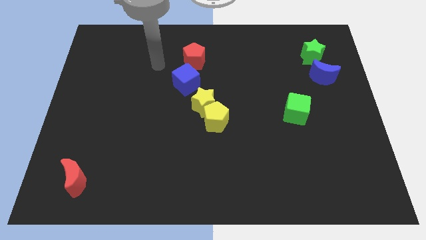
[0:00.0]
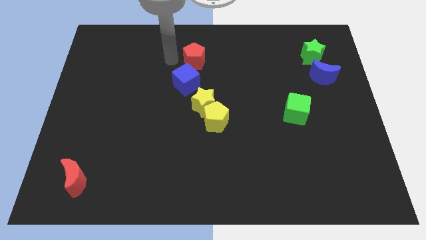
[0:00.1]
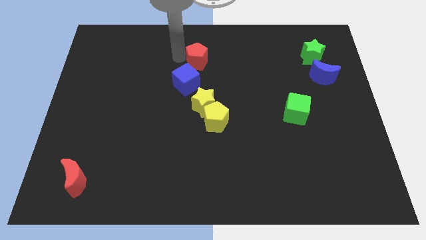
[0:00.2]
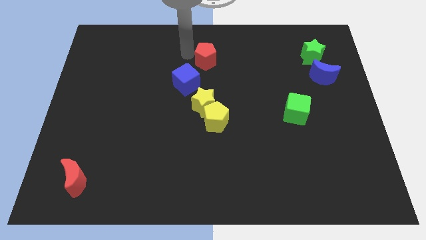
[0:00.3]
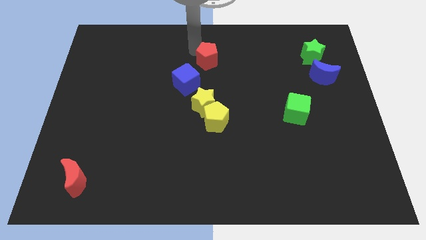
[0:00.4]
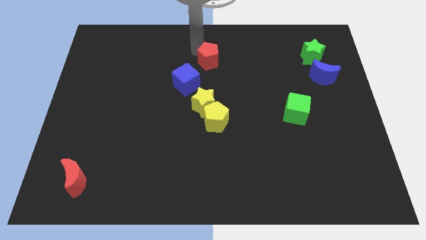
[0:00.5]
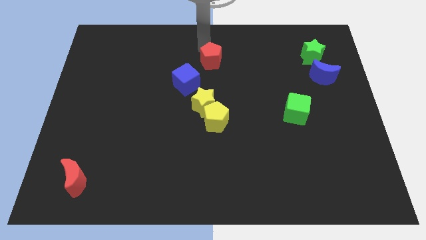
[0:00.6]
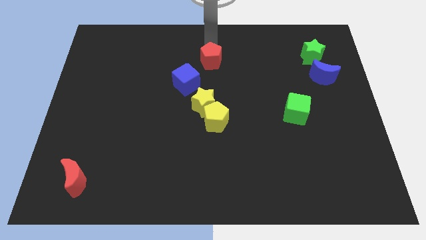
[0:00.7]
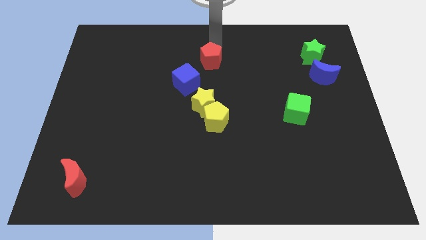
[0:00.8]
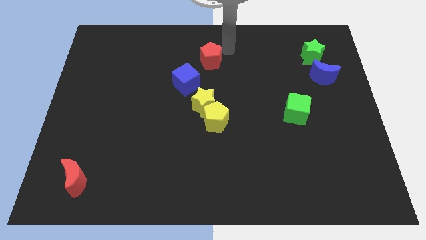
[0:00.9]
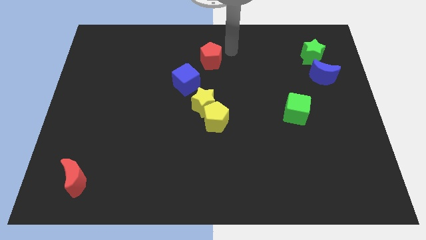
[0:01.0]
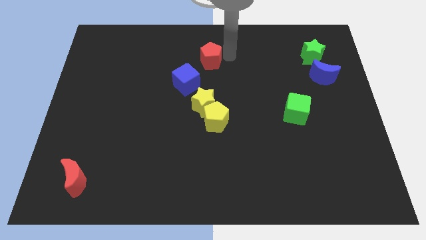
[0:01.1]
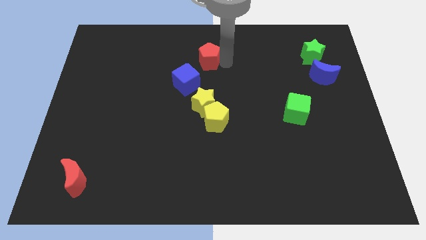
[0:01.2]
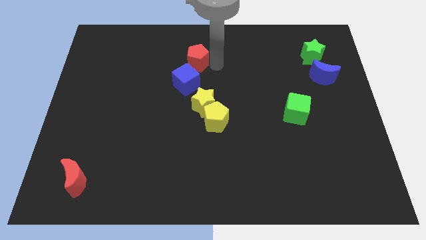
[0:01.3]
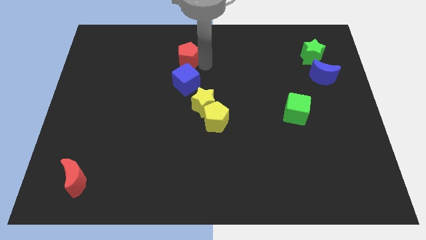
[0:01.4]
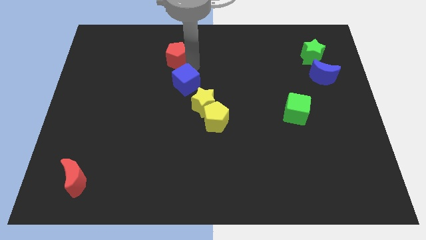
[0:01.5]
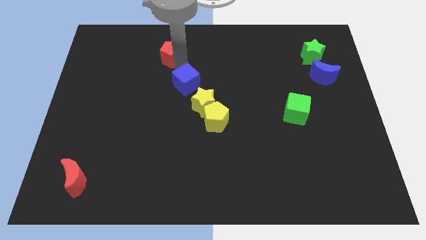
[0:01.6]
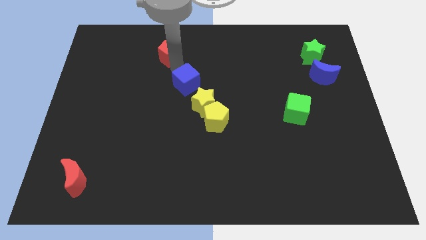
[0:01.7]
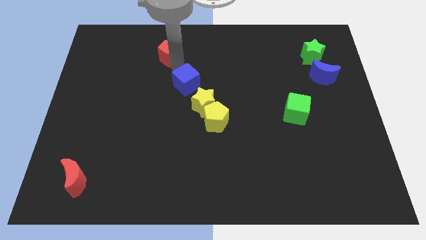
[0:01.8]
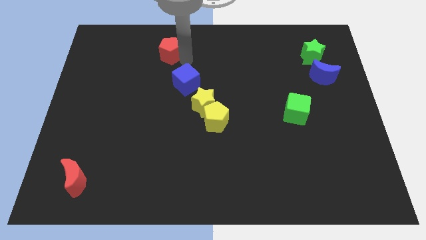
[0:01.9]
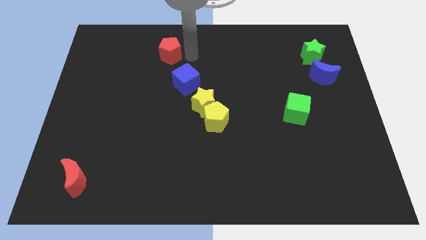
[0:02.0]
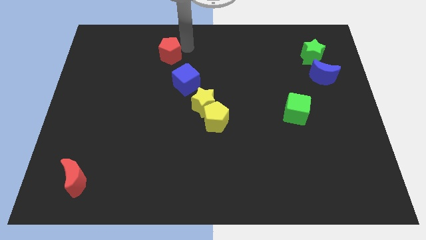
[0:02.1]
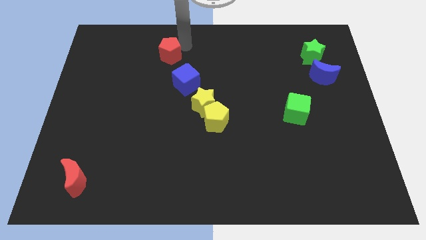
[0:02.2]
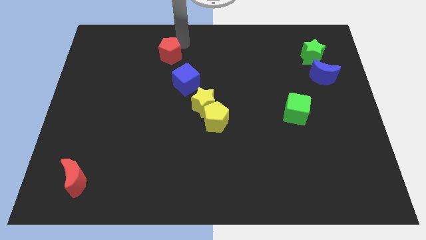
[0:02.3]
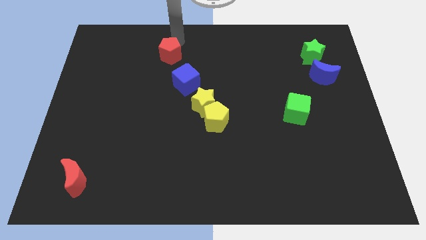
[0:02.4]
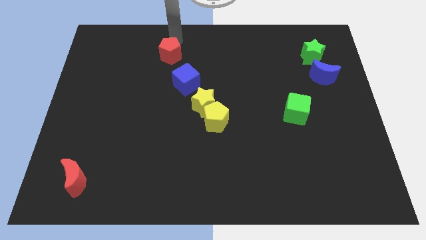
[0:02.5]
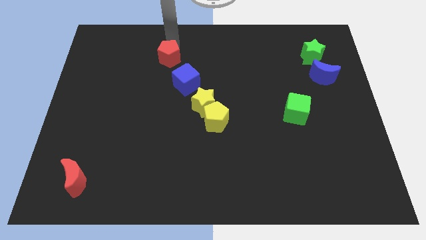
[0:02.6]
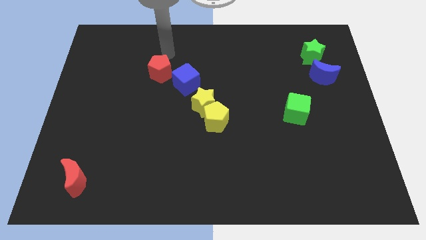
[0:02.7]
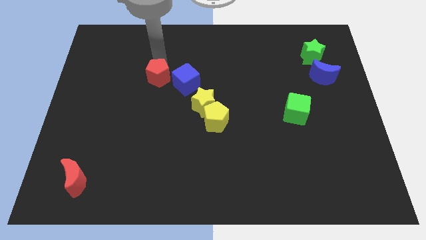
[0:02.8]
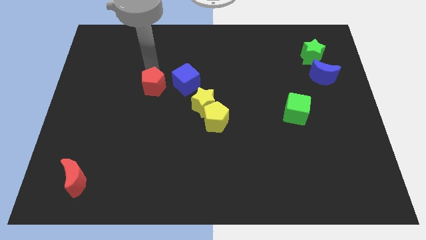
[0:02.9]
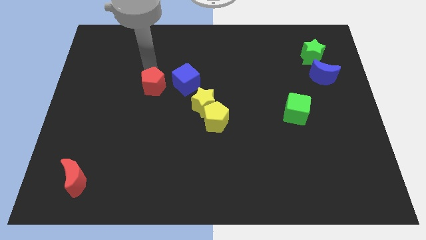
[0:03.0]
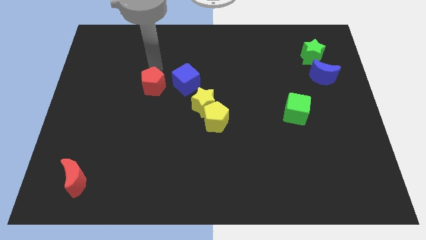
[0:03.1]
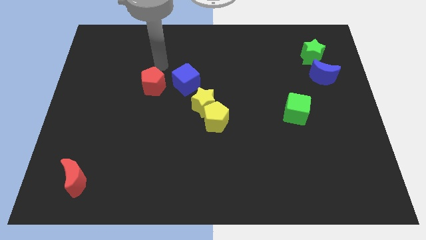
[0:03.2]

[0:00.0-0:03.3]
move the red pentagon to the left side of the blue cube

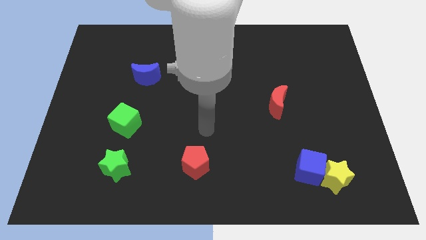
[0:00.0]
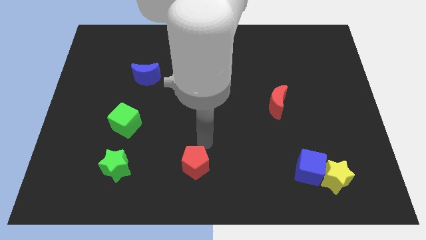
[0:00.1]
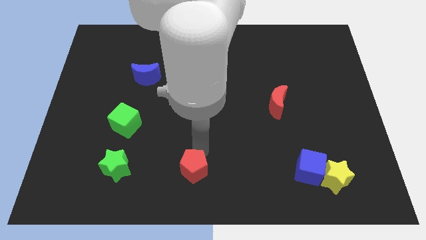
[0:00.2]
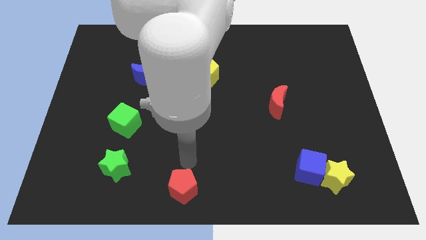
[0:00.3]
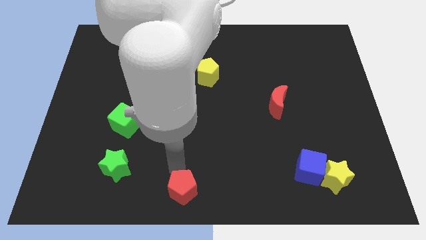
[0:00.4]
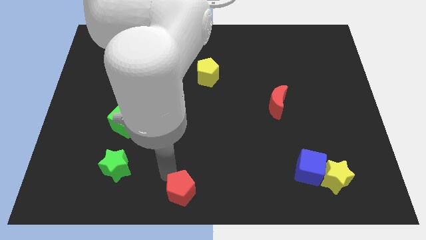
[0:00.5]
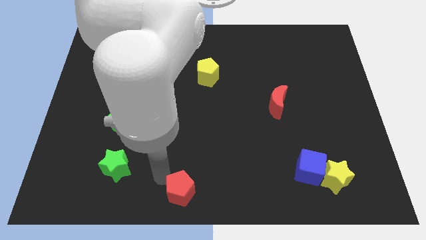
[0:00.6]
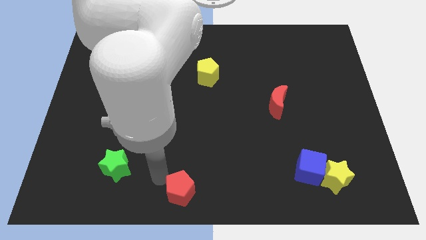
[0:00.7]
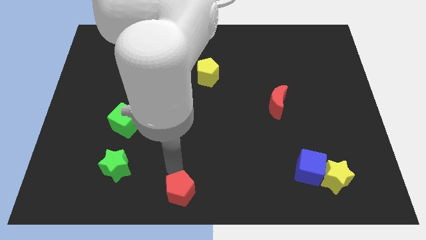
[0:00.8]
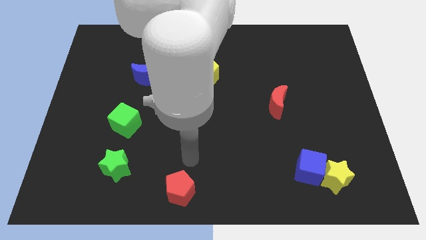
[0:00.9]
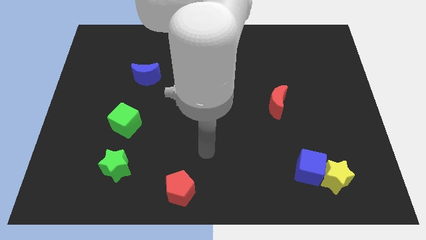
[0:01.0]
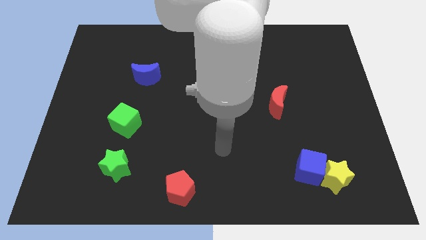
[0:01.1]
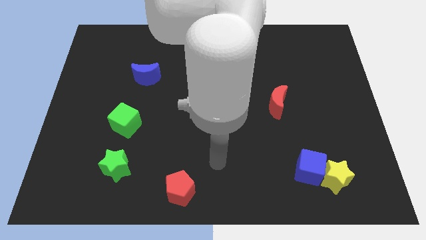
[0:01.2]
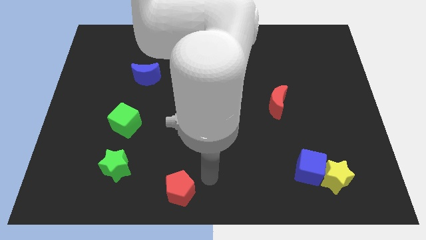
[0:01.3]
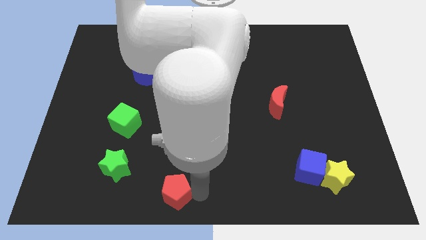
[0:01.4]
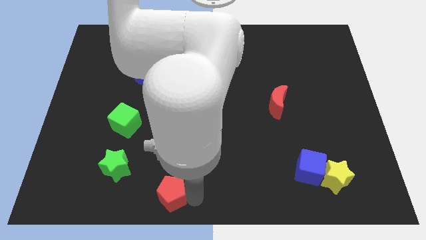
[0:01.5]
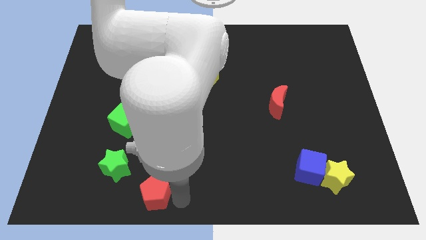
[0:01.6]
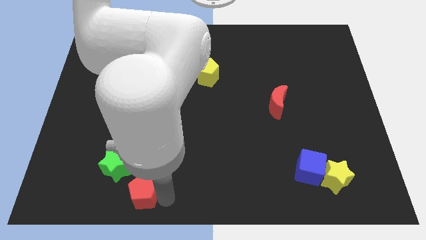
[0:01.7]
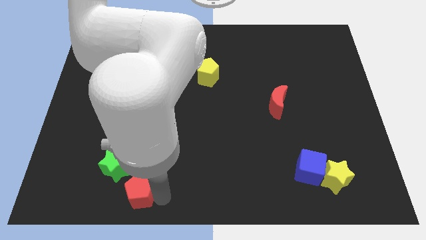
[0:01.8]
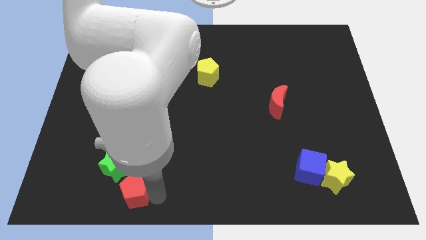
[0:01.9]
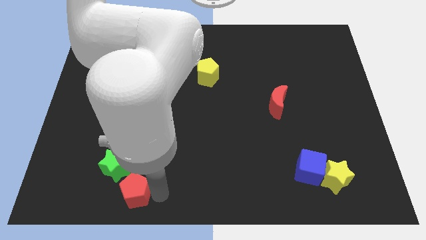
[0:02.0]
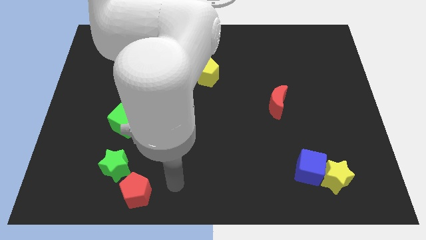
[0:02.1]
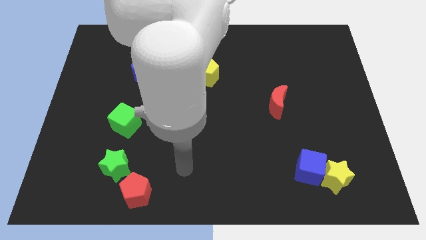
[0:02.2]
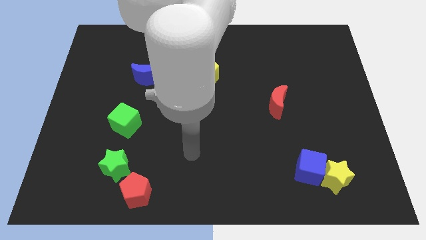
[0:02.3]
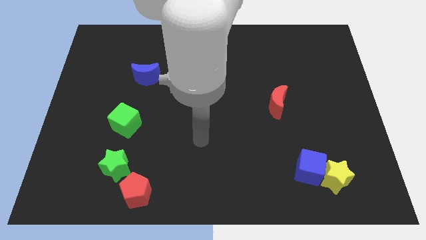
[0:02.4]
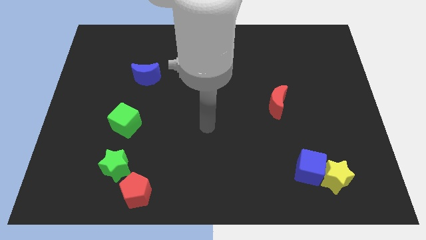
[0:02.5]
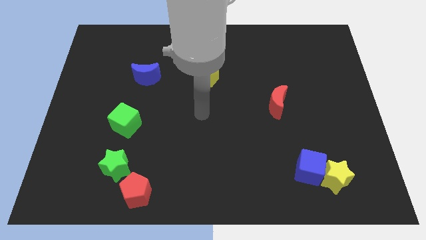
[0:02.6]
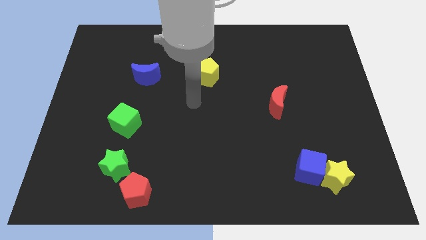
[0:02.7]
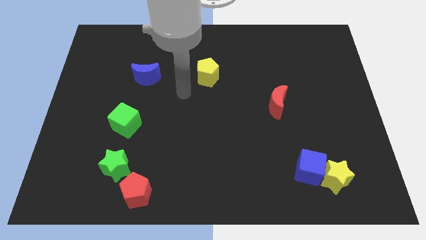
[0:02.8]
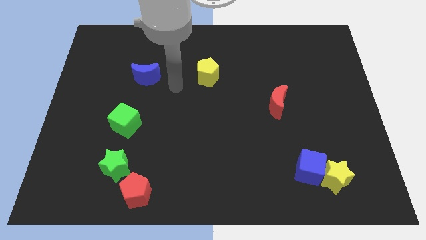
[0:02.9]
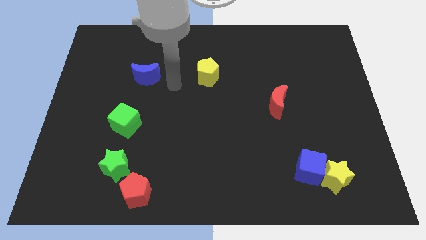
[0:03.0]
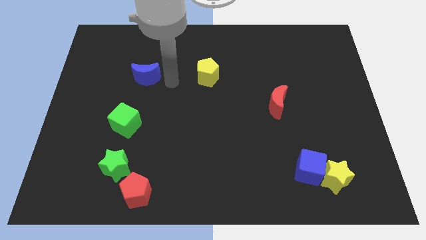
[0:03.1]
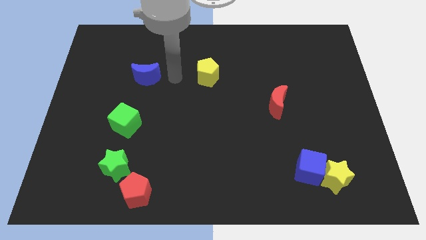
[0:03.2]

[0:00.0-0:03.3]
move the red pentagon at the bottom right of the green star

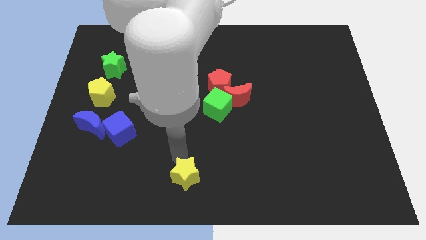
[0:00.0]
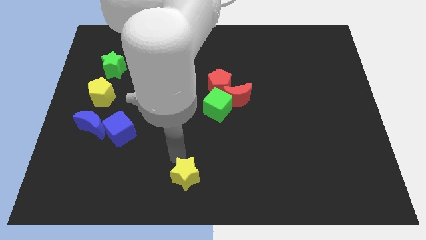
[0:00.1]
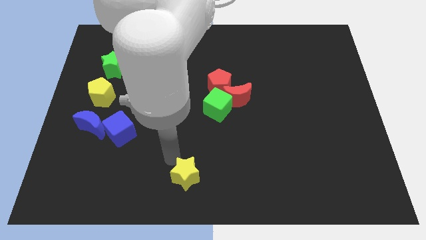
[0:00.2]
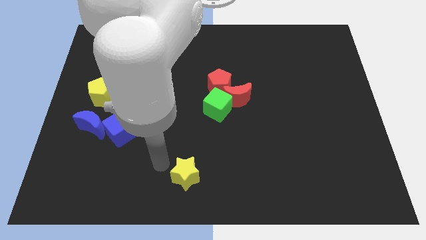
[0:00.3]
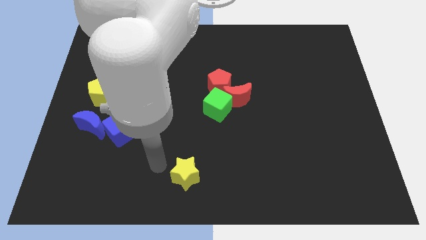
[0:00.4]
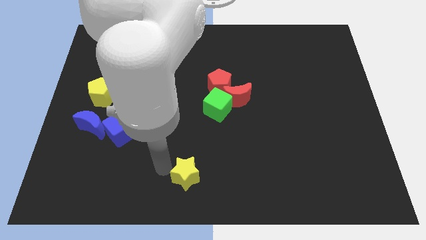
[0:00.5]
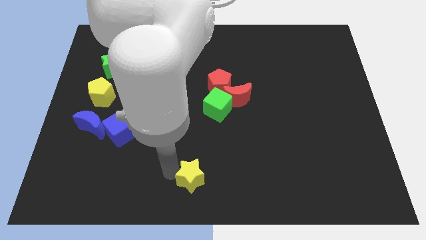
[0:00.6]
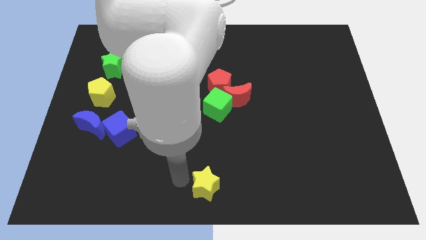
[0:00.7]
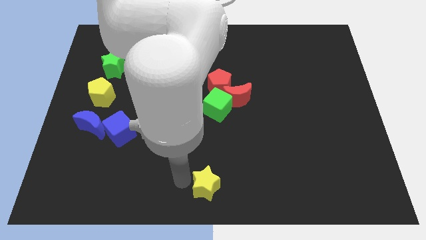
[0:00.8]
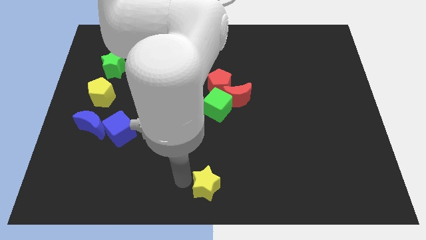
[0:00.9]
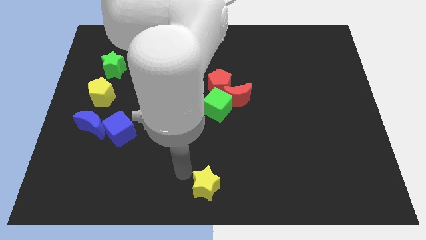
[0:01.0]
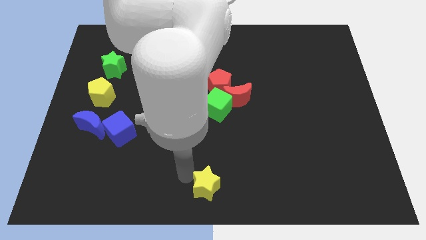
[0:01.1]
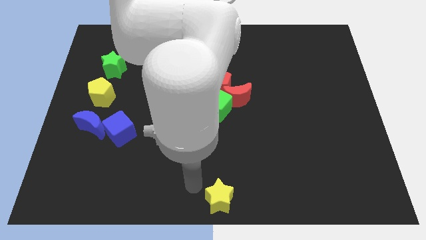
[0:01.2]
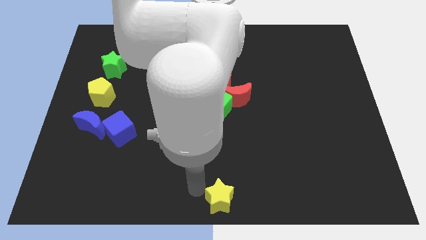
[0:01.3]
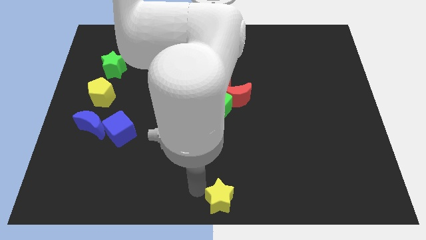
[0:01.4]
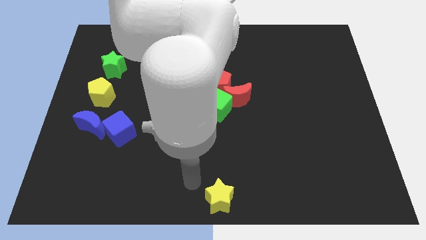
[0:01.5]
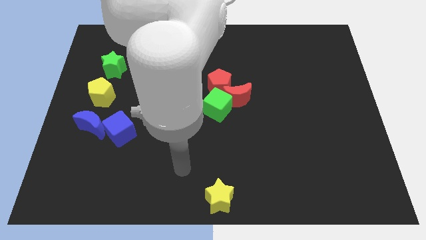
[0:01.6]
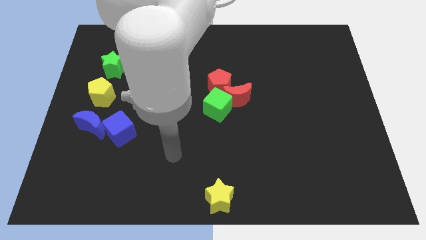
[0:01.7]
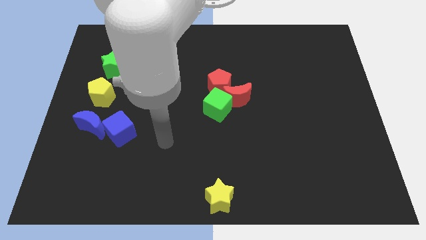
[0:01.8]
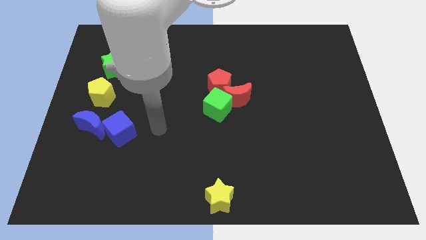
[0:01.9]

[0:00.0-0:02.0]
place the yellow star below the green cube

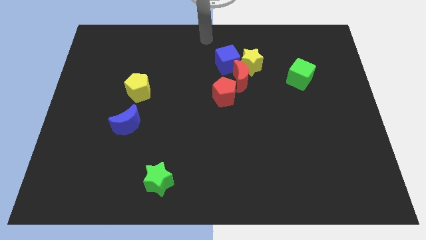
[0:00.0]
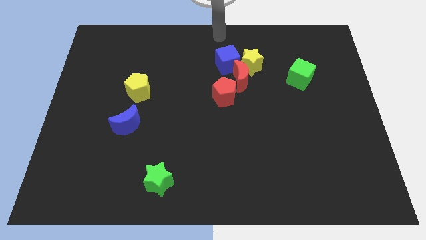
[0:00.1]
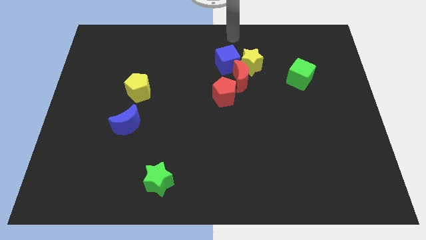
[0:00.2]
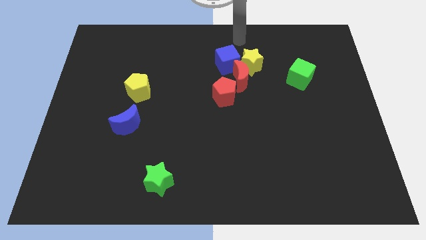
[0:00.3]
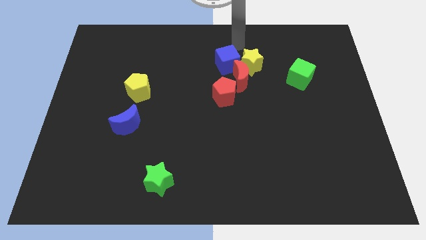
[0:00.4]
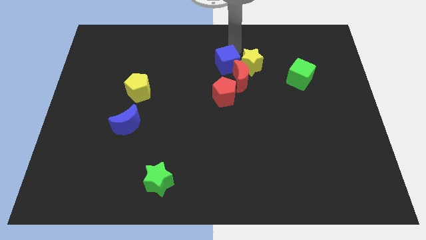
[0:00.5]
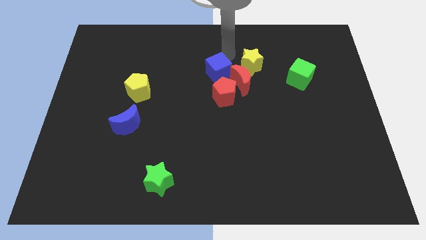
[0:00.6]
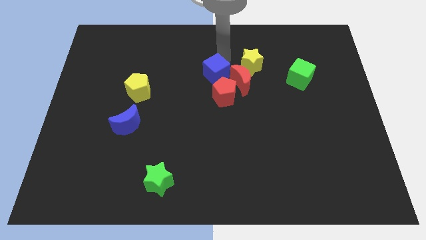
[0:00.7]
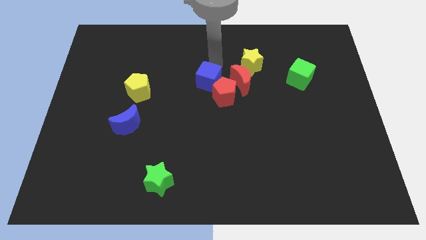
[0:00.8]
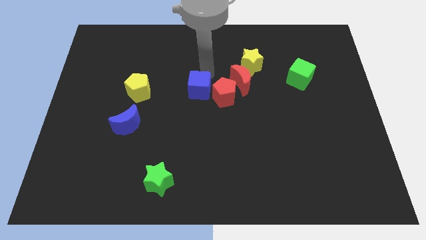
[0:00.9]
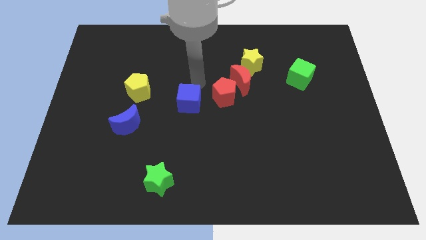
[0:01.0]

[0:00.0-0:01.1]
separate blue cube from yellow star and red moon
